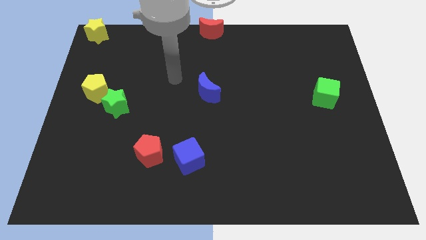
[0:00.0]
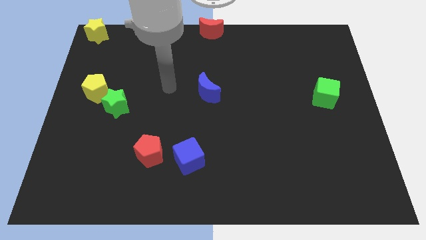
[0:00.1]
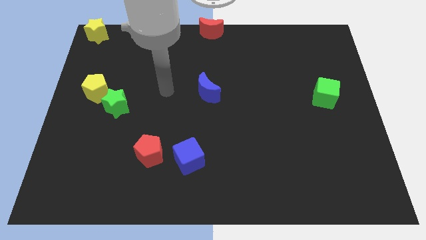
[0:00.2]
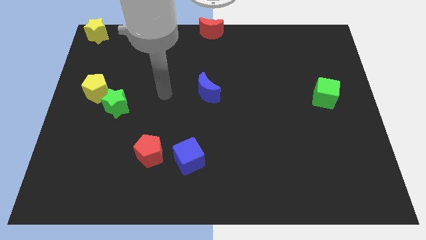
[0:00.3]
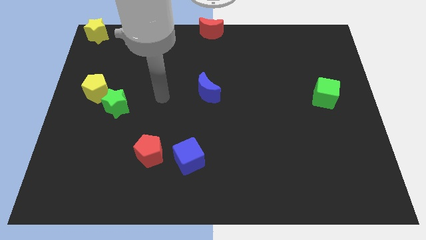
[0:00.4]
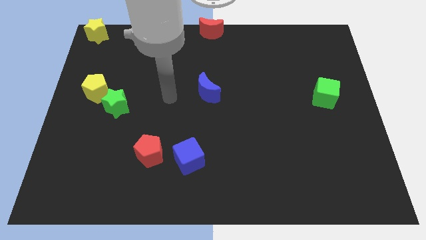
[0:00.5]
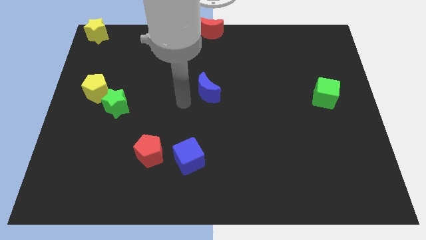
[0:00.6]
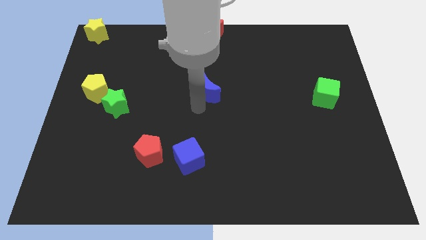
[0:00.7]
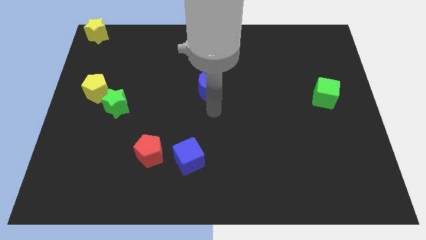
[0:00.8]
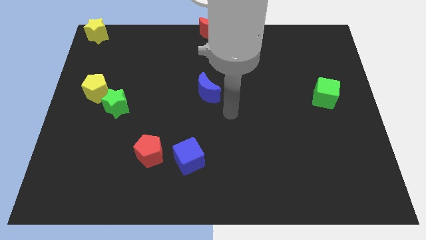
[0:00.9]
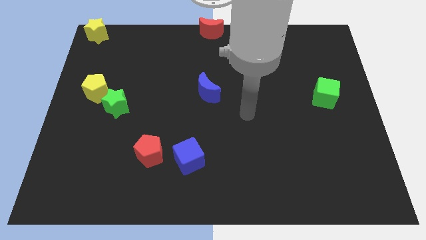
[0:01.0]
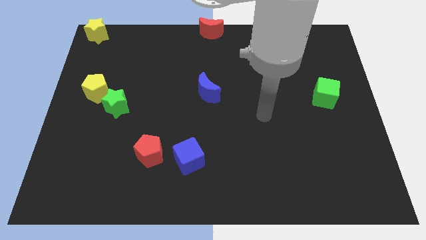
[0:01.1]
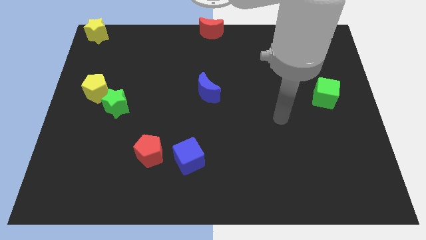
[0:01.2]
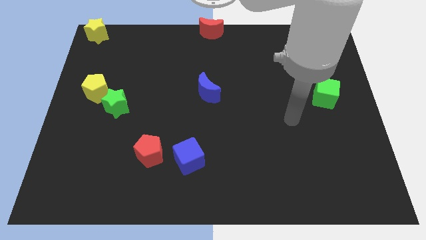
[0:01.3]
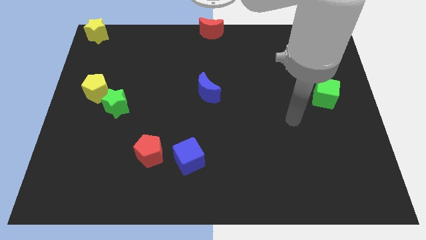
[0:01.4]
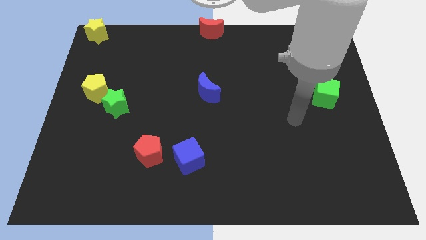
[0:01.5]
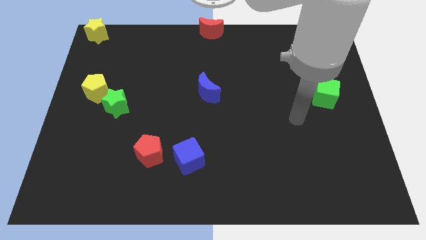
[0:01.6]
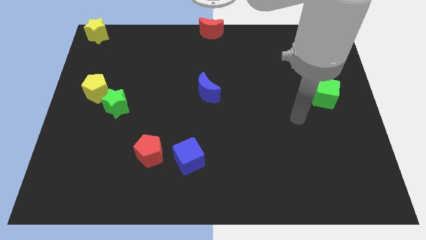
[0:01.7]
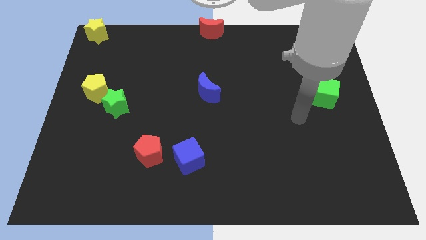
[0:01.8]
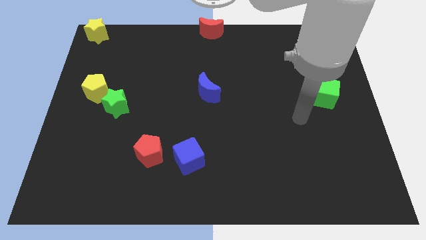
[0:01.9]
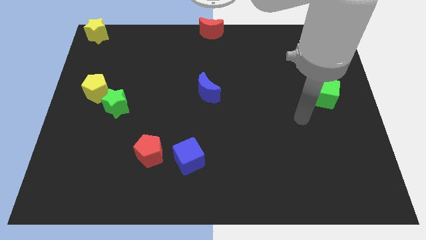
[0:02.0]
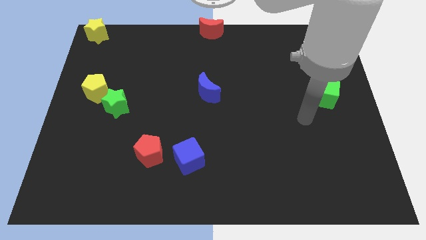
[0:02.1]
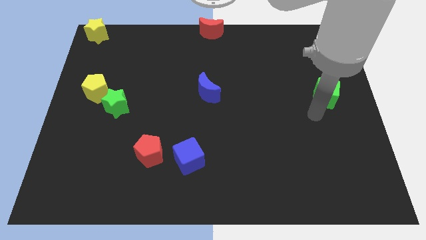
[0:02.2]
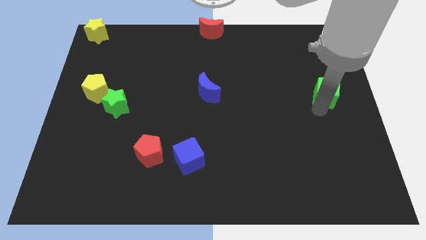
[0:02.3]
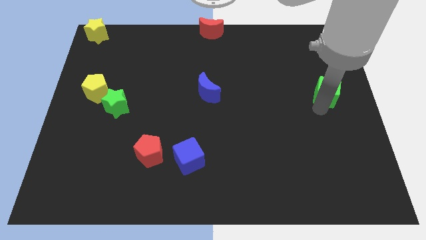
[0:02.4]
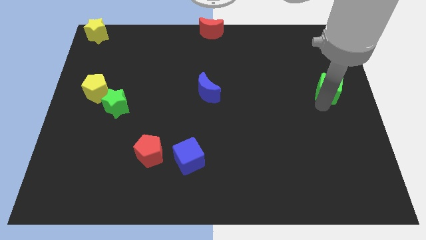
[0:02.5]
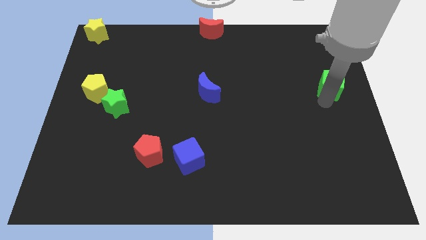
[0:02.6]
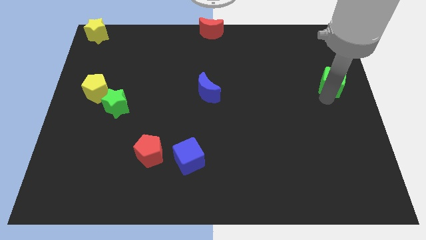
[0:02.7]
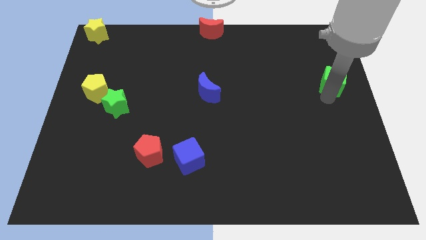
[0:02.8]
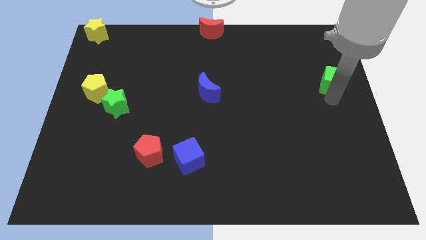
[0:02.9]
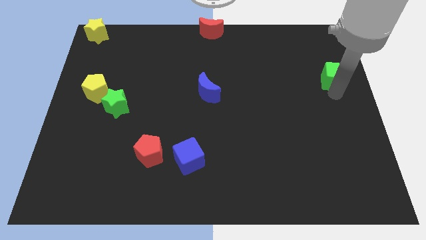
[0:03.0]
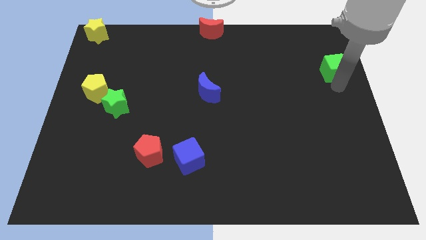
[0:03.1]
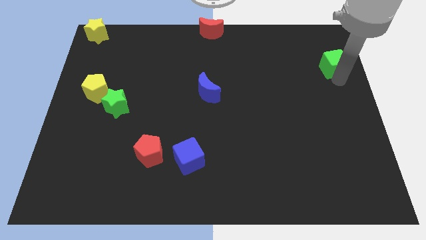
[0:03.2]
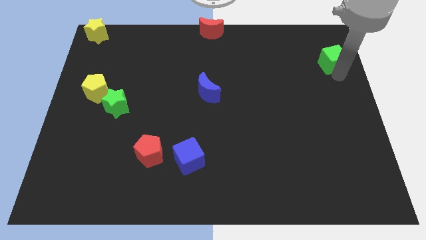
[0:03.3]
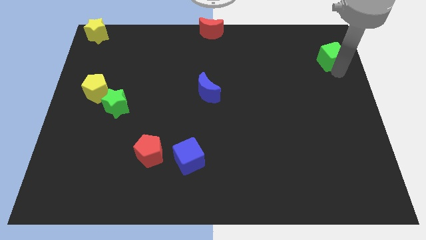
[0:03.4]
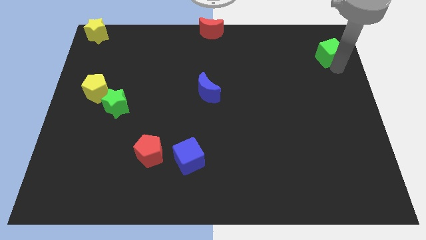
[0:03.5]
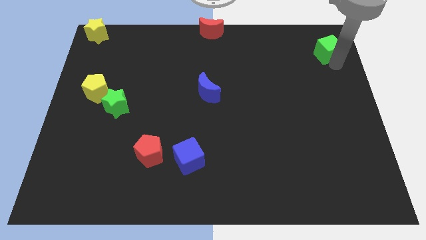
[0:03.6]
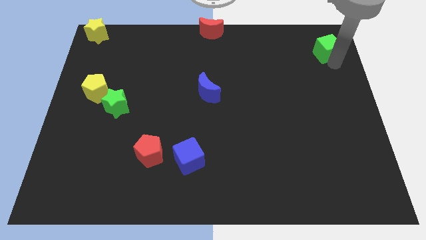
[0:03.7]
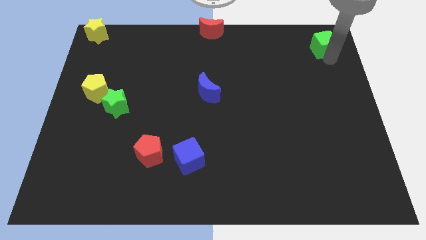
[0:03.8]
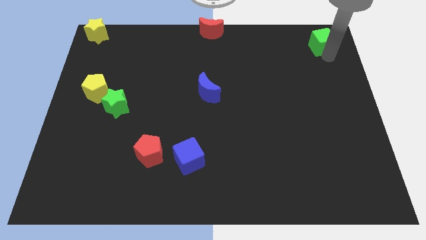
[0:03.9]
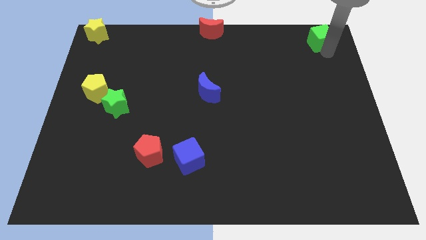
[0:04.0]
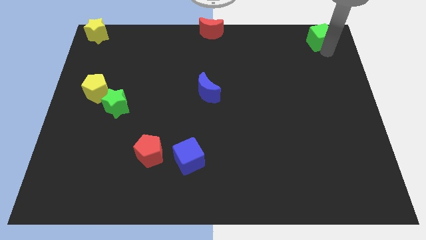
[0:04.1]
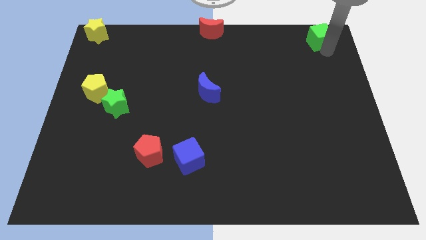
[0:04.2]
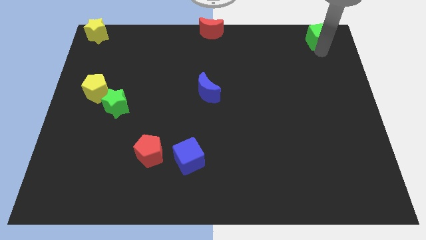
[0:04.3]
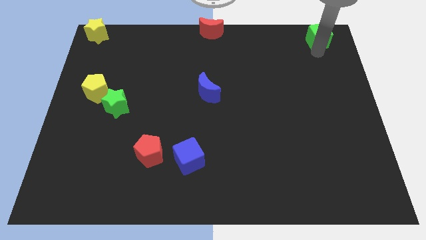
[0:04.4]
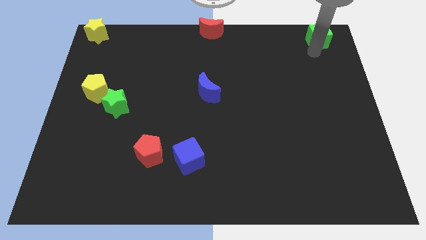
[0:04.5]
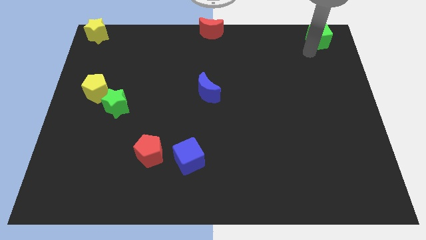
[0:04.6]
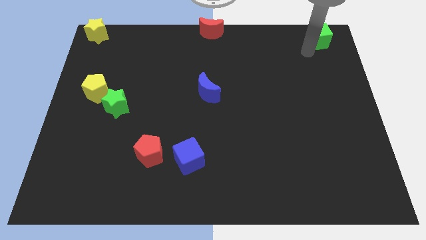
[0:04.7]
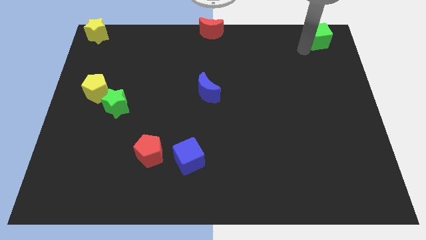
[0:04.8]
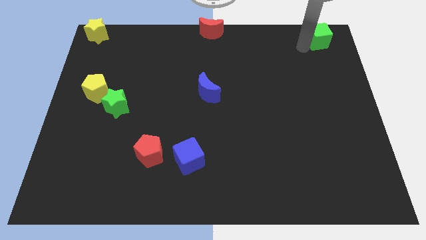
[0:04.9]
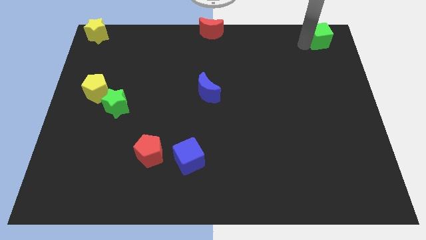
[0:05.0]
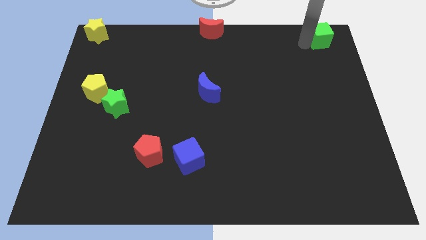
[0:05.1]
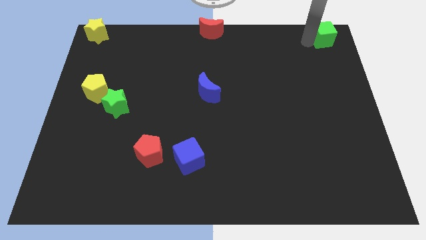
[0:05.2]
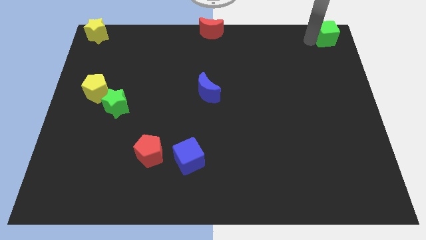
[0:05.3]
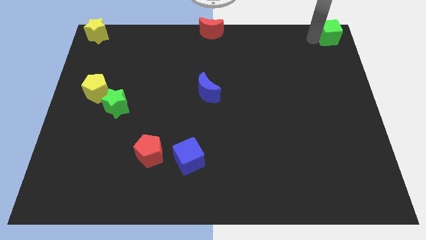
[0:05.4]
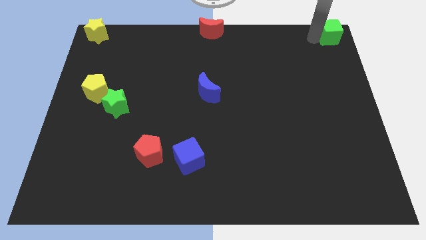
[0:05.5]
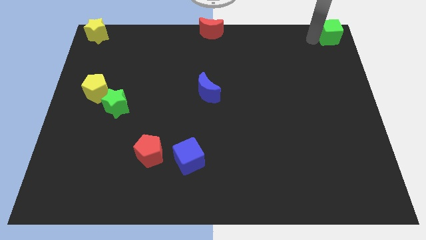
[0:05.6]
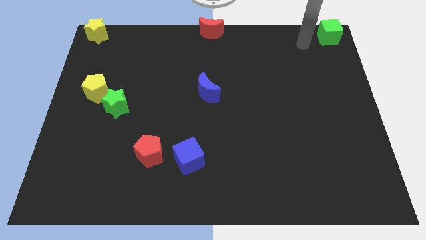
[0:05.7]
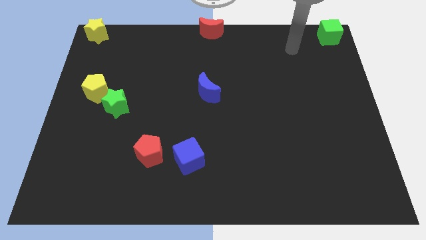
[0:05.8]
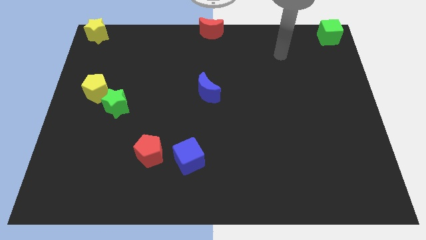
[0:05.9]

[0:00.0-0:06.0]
place the green cube to the right of the red crescent

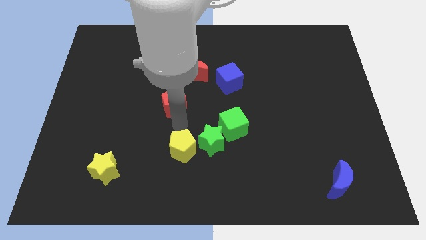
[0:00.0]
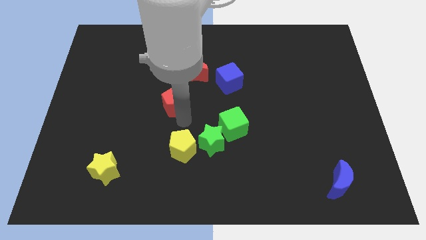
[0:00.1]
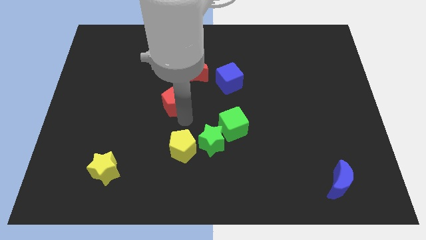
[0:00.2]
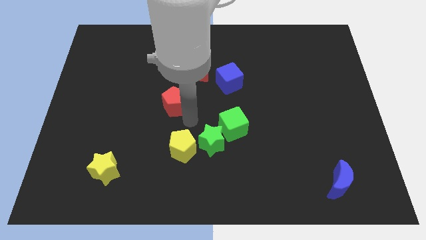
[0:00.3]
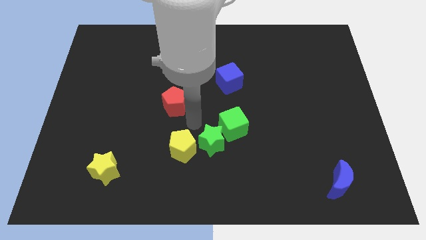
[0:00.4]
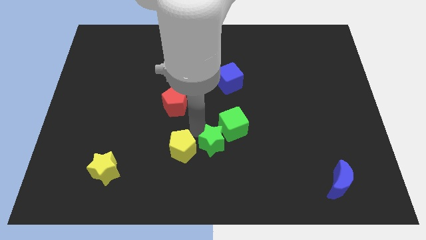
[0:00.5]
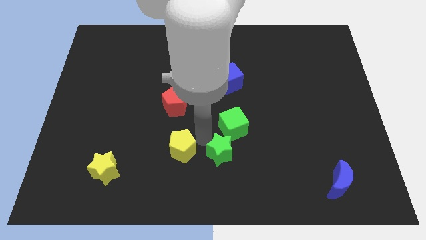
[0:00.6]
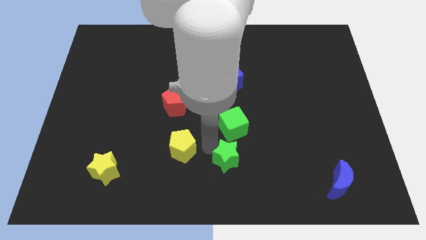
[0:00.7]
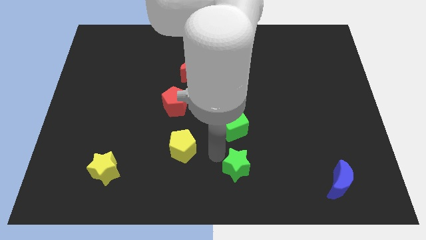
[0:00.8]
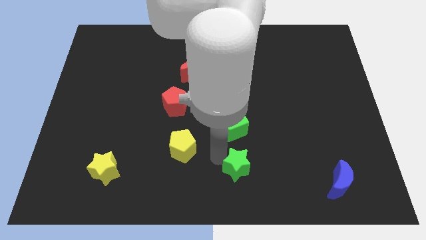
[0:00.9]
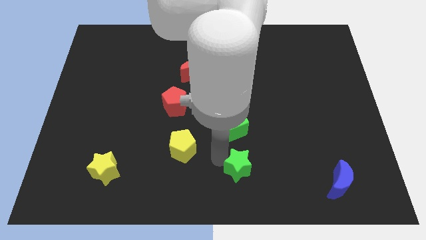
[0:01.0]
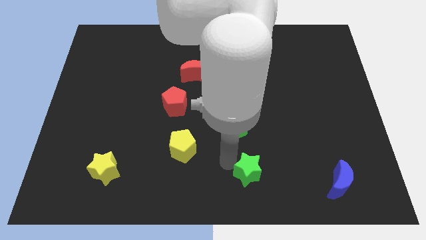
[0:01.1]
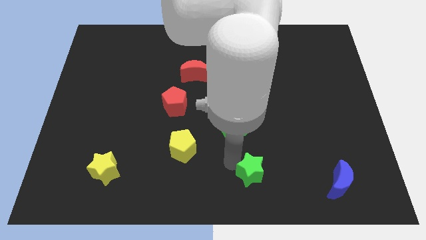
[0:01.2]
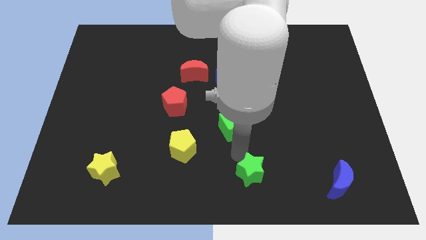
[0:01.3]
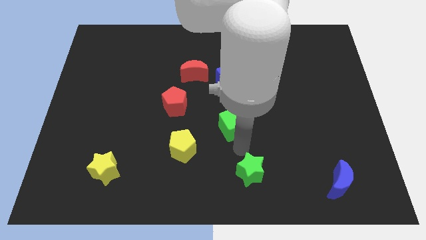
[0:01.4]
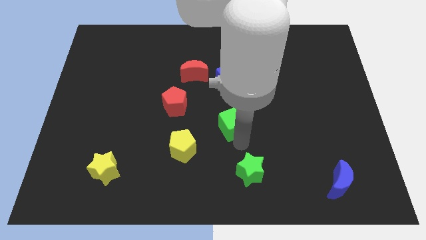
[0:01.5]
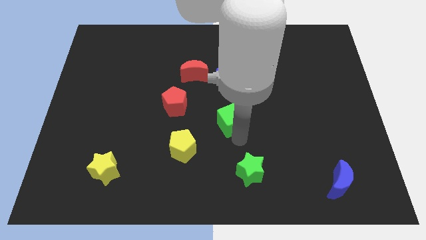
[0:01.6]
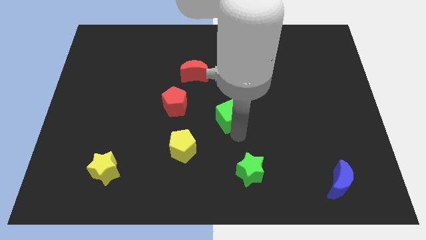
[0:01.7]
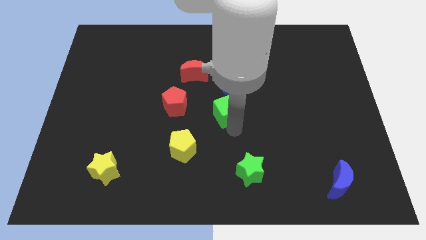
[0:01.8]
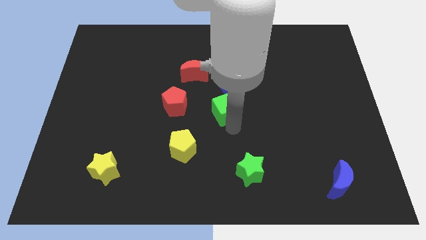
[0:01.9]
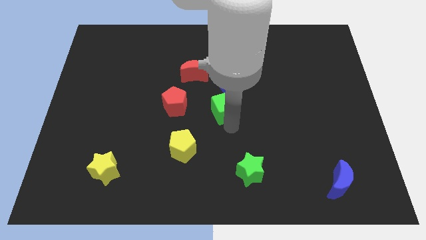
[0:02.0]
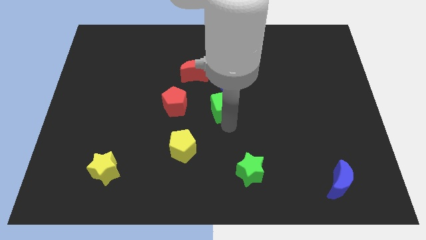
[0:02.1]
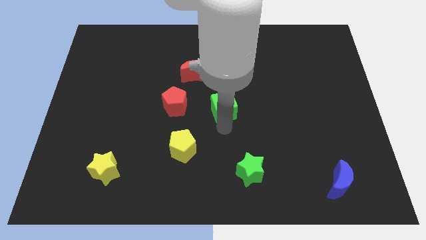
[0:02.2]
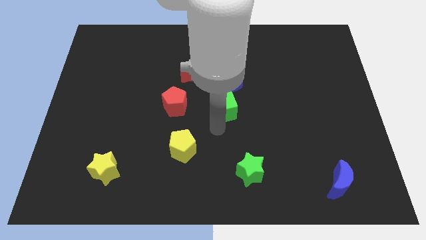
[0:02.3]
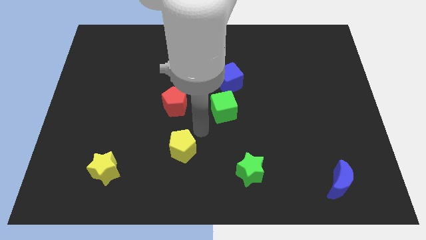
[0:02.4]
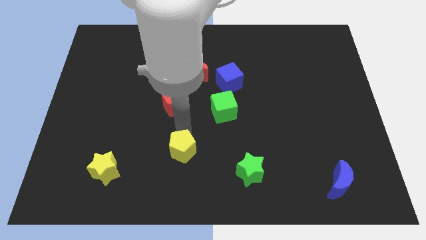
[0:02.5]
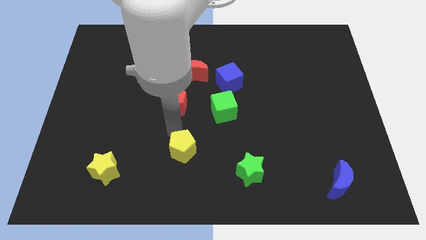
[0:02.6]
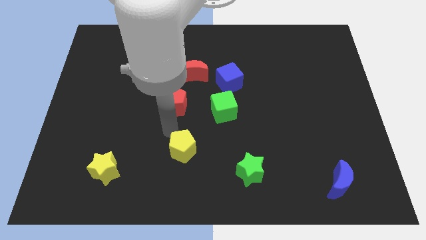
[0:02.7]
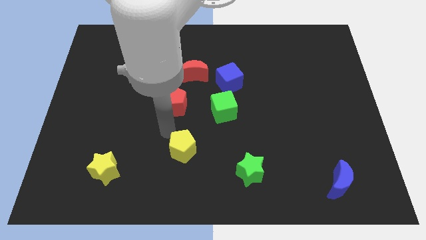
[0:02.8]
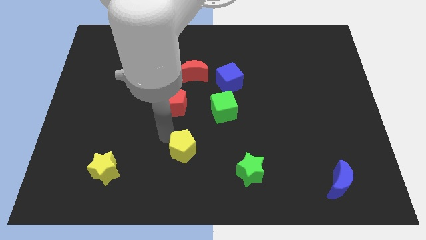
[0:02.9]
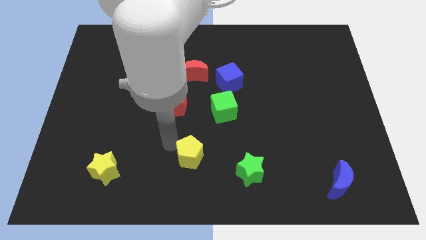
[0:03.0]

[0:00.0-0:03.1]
separate the green star and green cube from each other
